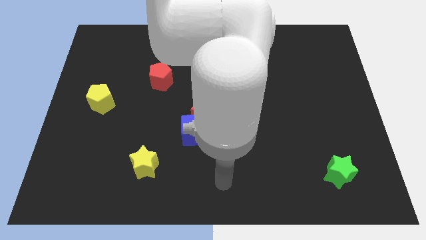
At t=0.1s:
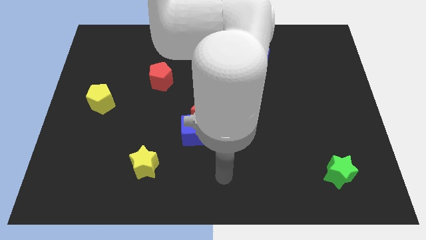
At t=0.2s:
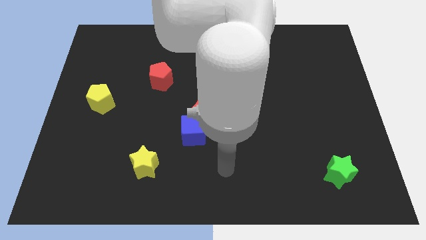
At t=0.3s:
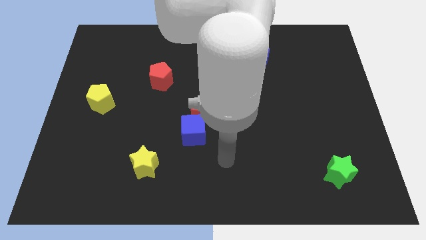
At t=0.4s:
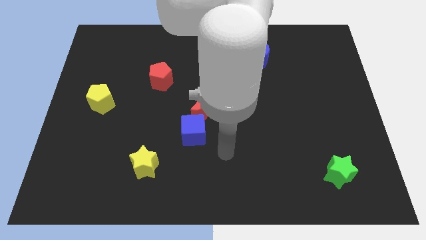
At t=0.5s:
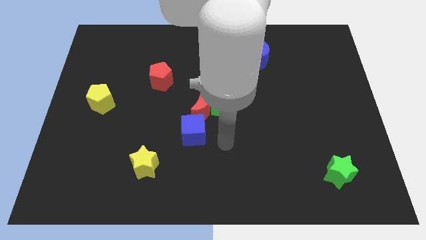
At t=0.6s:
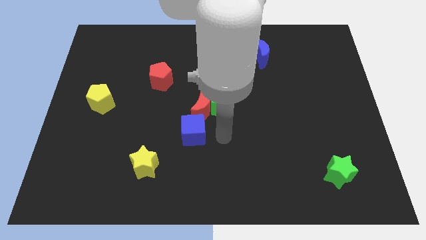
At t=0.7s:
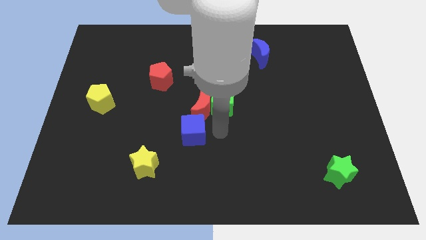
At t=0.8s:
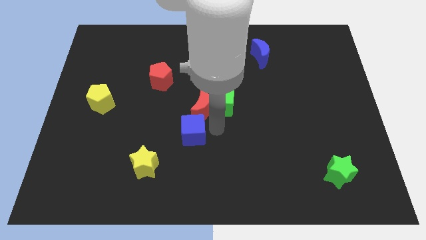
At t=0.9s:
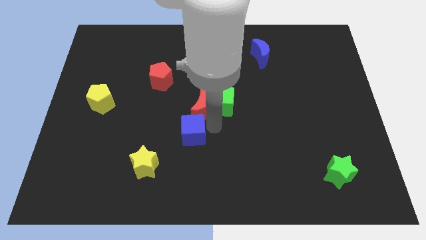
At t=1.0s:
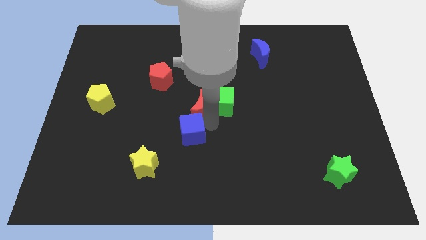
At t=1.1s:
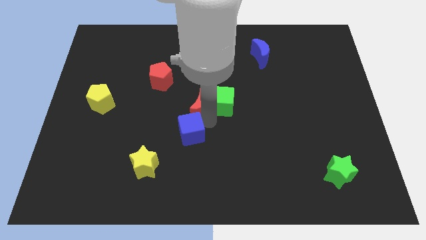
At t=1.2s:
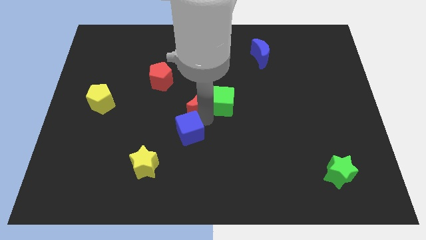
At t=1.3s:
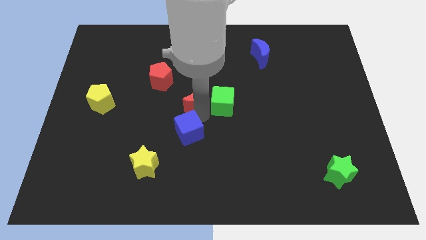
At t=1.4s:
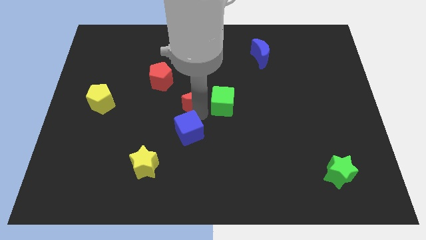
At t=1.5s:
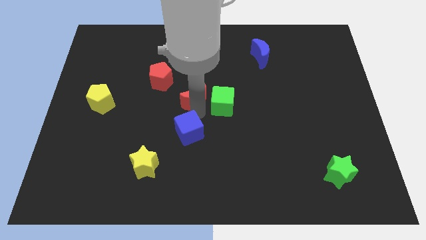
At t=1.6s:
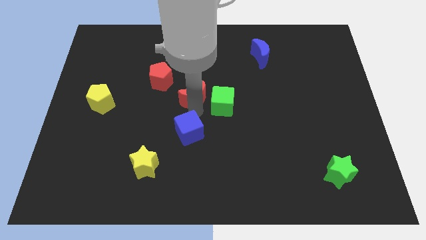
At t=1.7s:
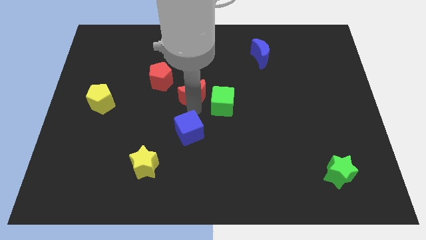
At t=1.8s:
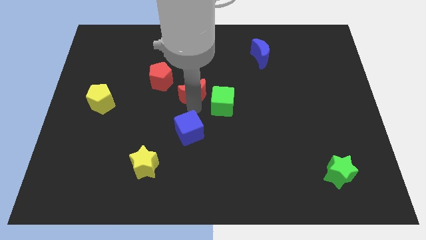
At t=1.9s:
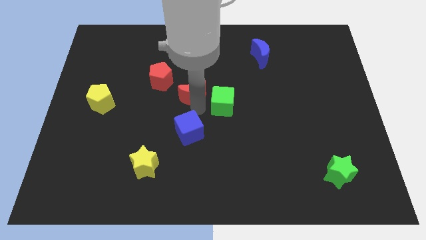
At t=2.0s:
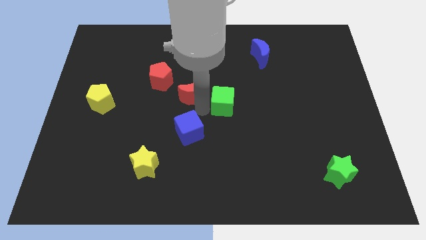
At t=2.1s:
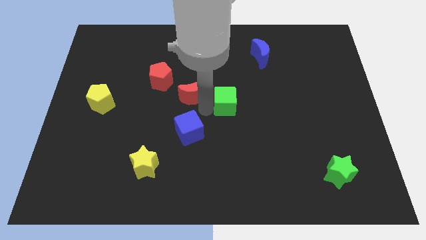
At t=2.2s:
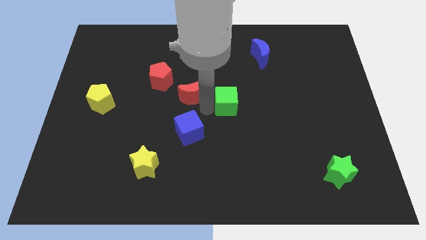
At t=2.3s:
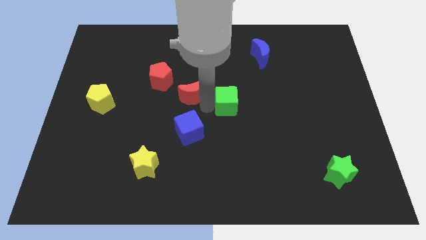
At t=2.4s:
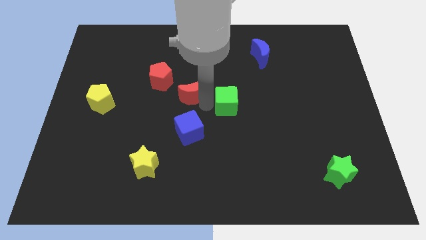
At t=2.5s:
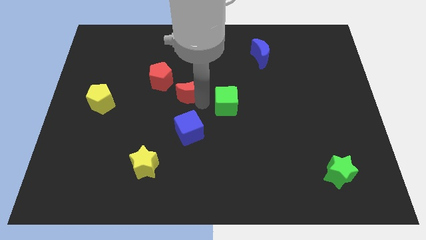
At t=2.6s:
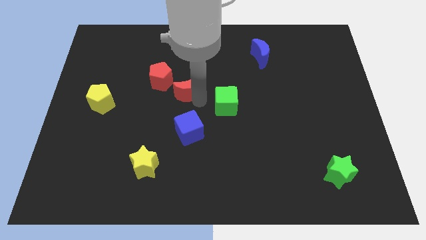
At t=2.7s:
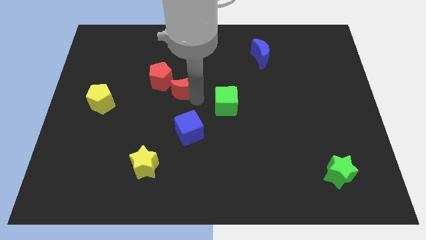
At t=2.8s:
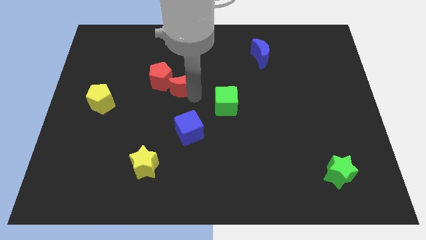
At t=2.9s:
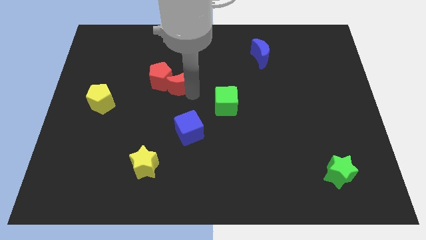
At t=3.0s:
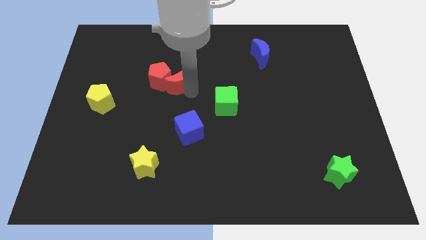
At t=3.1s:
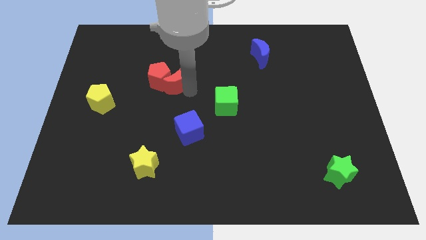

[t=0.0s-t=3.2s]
put the red moon towards the red pentagon

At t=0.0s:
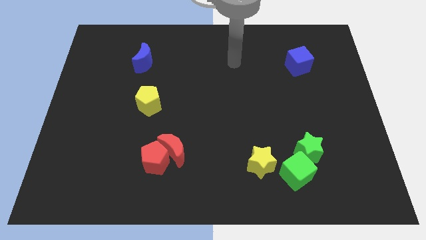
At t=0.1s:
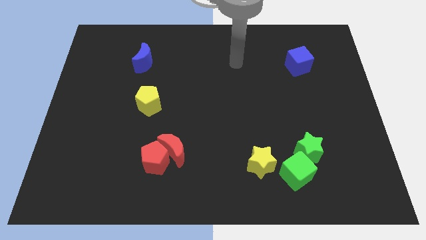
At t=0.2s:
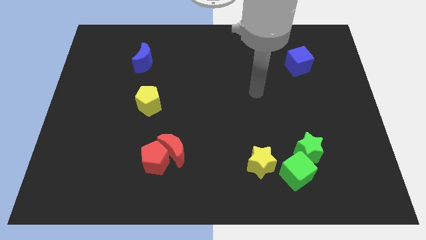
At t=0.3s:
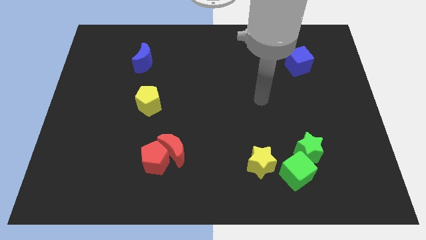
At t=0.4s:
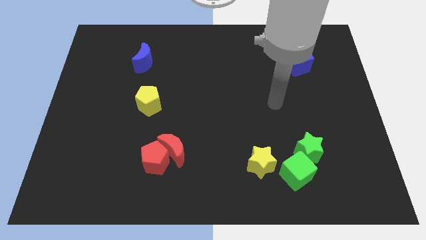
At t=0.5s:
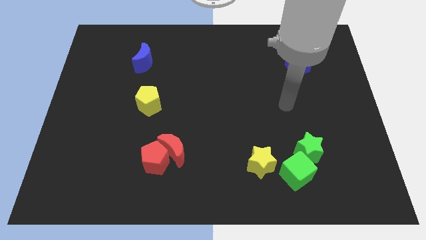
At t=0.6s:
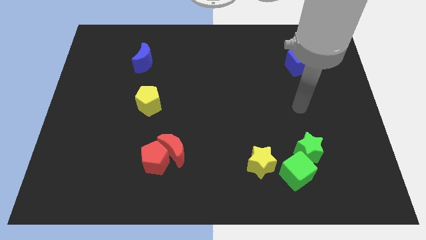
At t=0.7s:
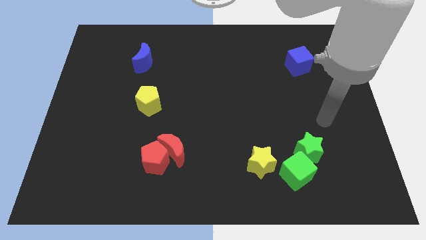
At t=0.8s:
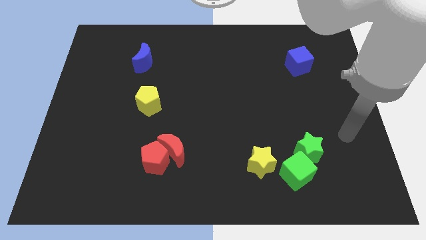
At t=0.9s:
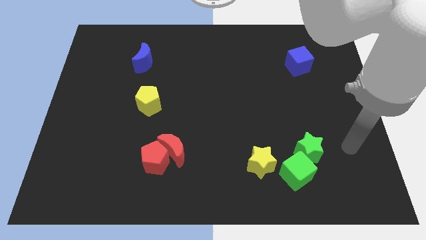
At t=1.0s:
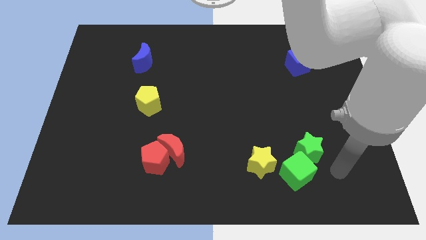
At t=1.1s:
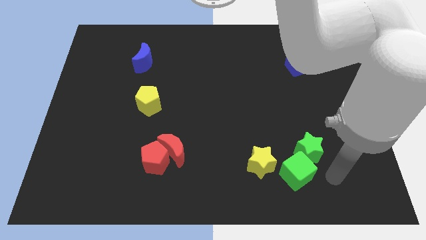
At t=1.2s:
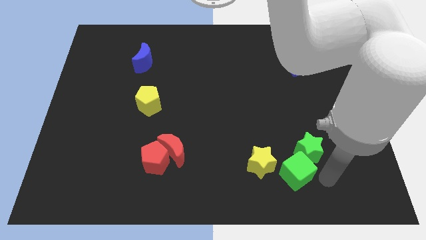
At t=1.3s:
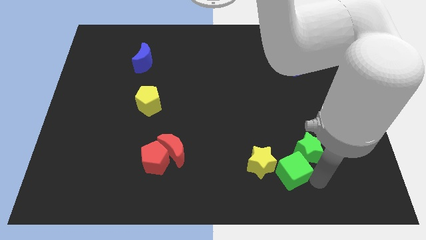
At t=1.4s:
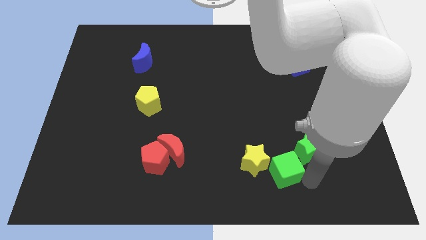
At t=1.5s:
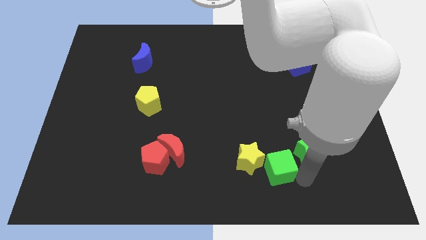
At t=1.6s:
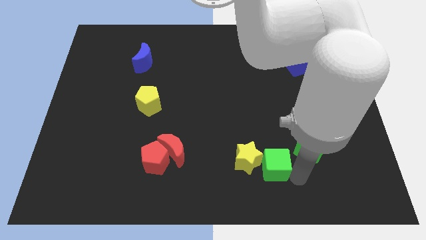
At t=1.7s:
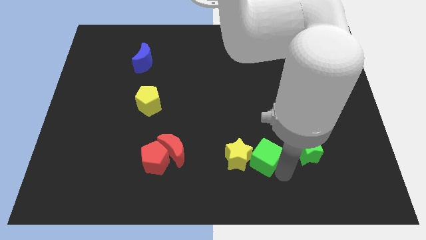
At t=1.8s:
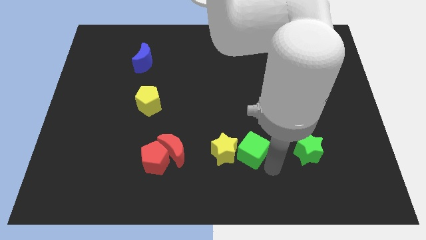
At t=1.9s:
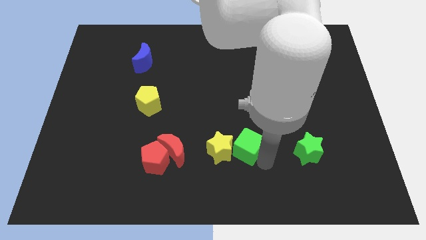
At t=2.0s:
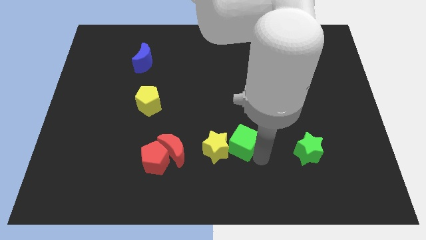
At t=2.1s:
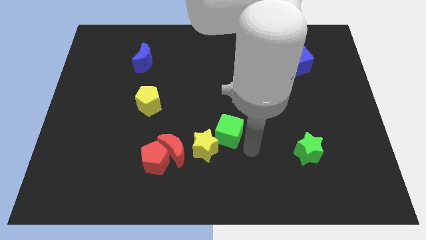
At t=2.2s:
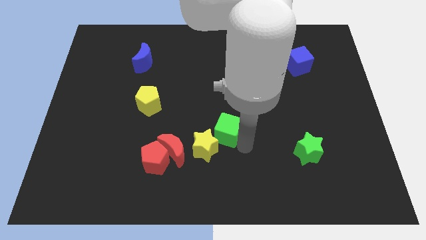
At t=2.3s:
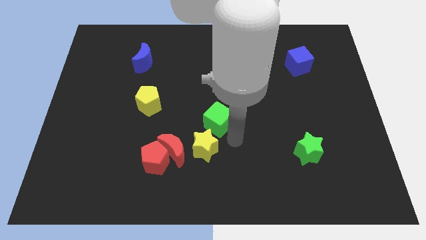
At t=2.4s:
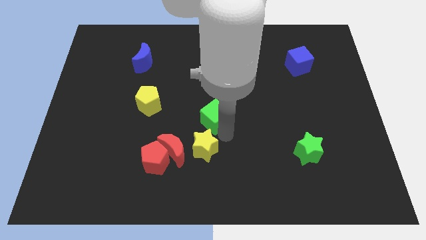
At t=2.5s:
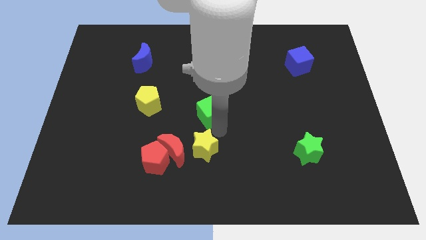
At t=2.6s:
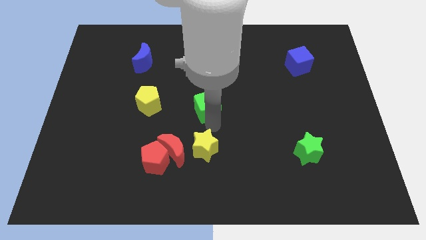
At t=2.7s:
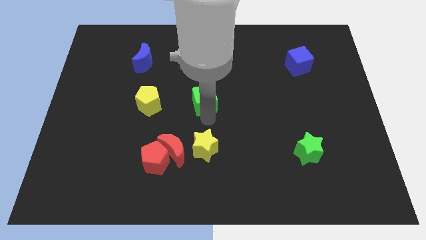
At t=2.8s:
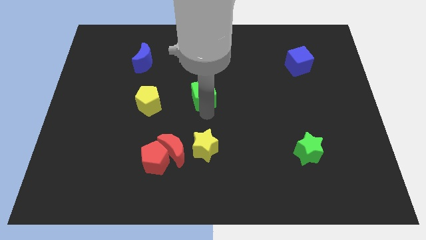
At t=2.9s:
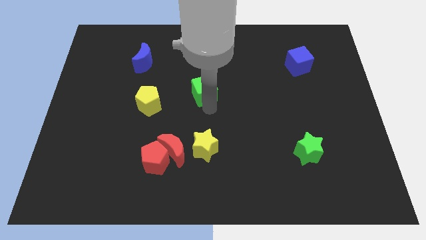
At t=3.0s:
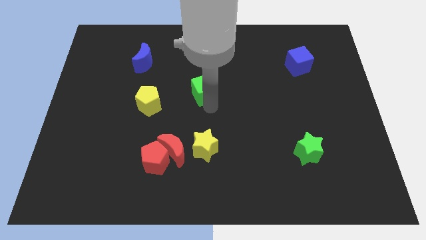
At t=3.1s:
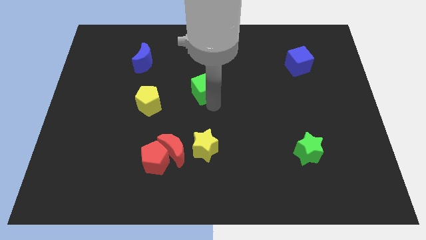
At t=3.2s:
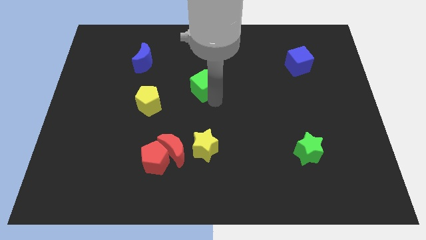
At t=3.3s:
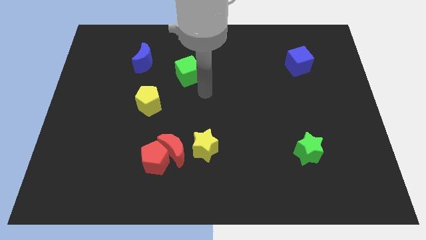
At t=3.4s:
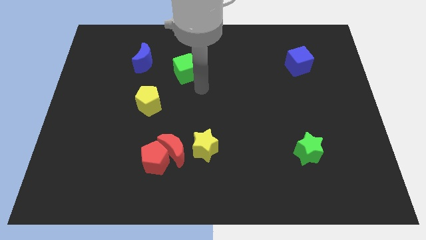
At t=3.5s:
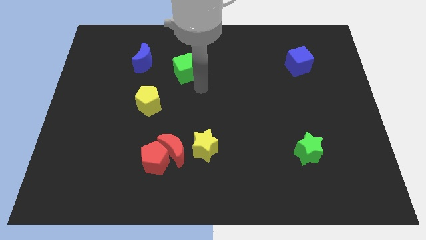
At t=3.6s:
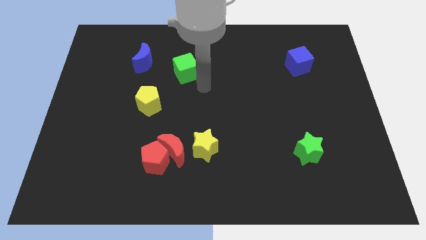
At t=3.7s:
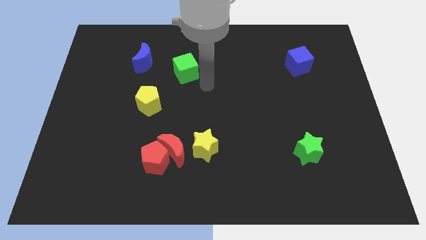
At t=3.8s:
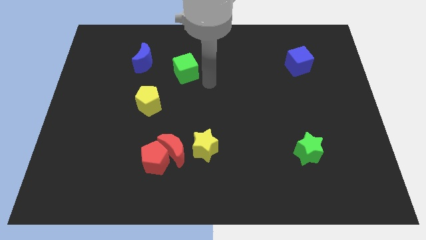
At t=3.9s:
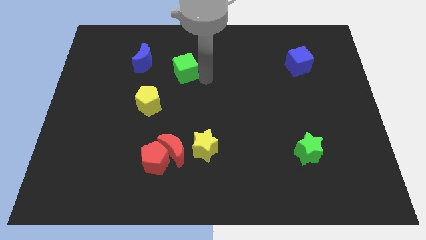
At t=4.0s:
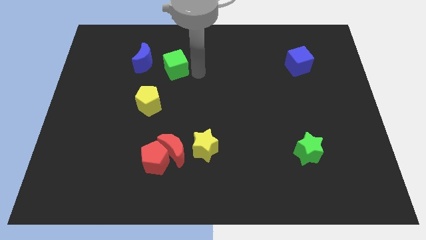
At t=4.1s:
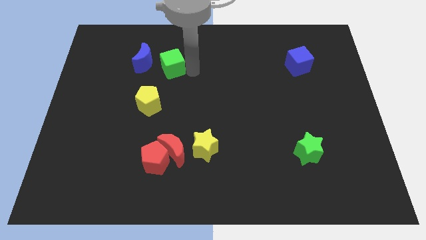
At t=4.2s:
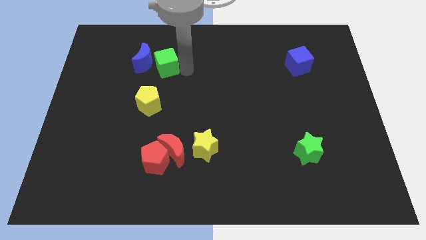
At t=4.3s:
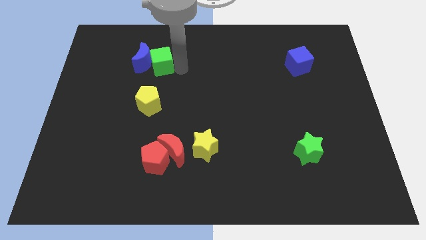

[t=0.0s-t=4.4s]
push the green cube next to the blue moon

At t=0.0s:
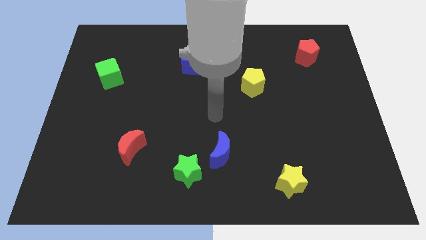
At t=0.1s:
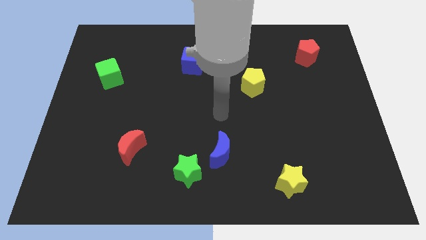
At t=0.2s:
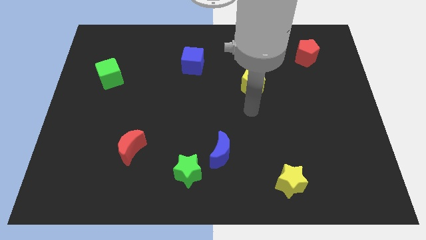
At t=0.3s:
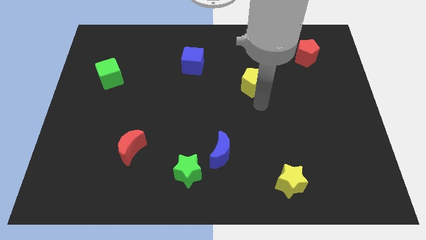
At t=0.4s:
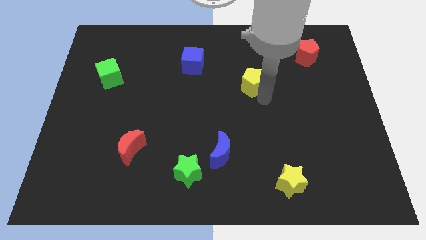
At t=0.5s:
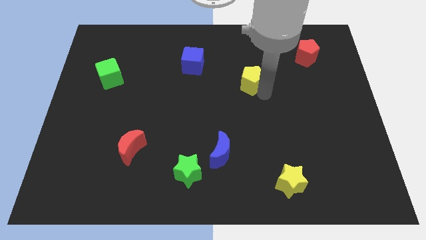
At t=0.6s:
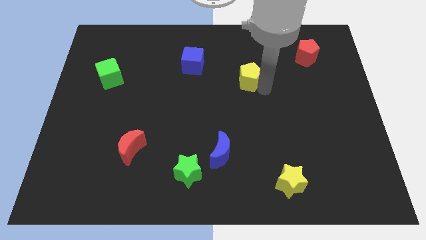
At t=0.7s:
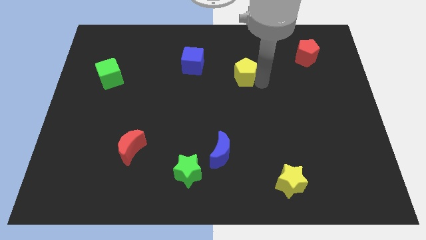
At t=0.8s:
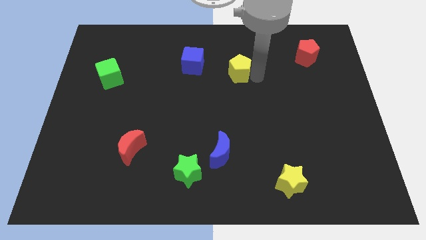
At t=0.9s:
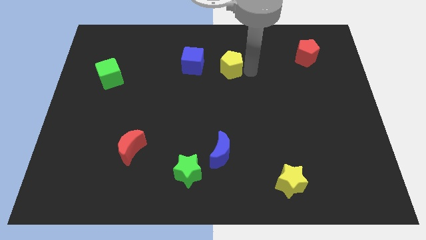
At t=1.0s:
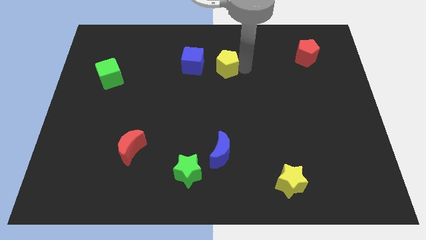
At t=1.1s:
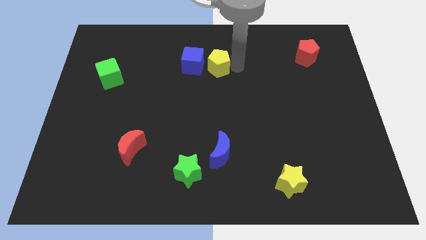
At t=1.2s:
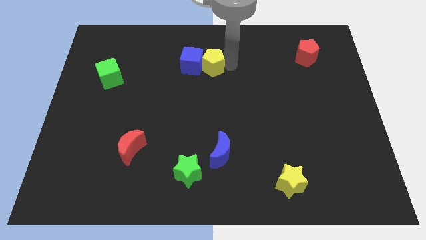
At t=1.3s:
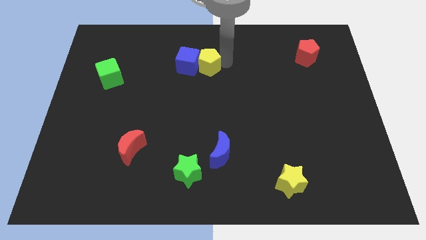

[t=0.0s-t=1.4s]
move the yellow pentagon close to the blue cube
